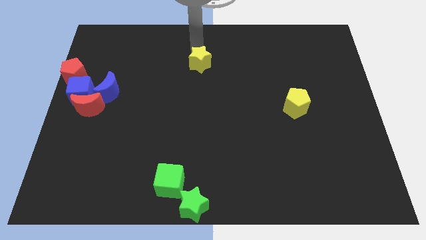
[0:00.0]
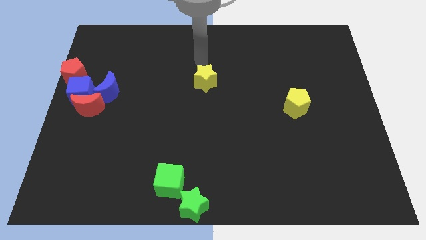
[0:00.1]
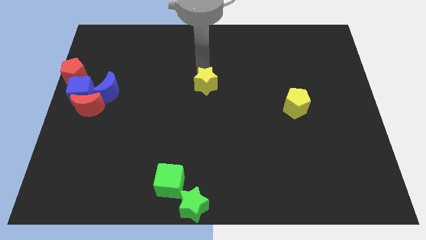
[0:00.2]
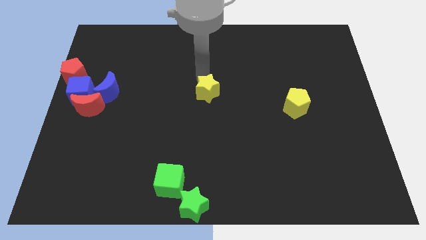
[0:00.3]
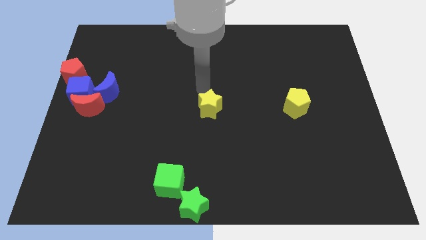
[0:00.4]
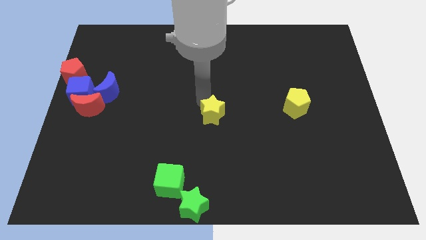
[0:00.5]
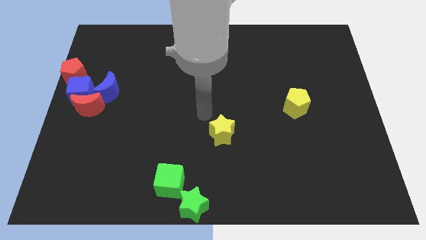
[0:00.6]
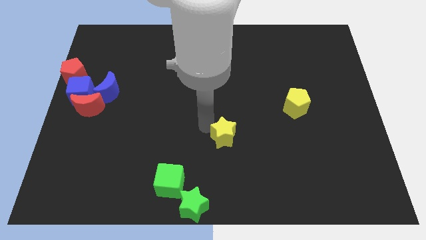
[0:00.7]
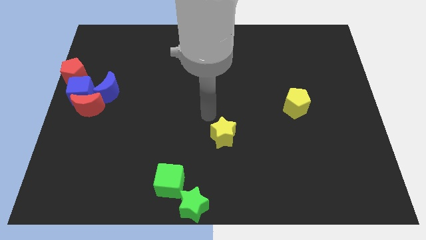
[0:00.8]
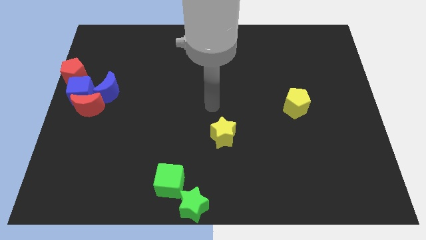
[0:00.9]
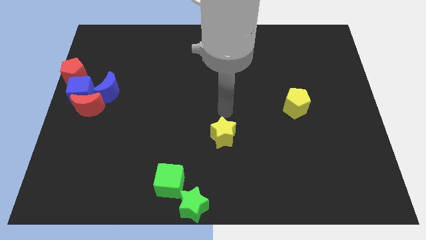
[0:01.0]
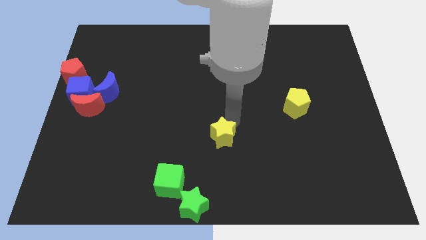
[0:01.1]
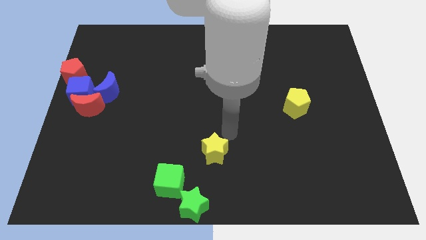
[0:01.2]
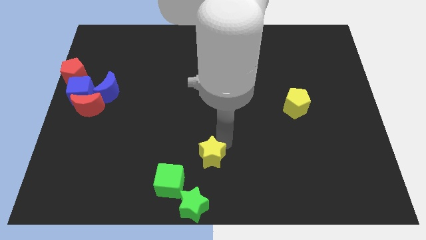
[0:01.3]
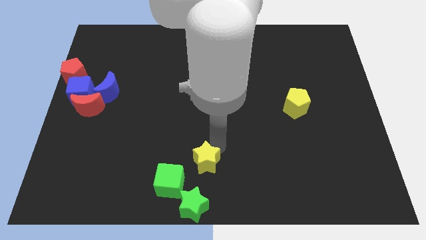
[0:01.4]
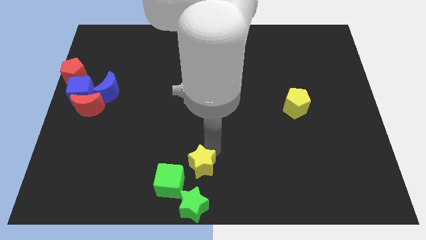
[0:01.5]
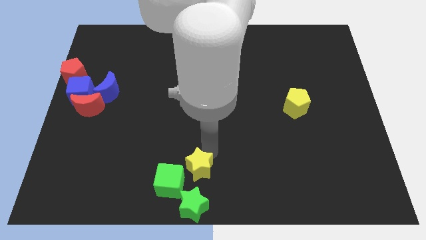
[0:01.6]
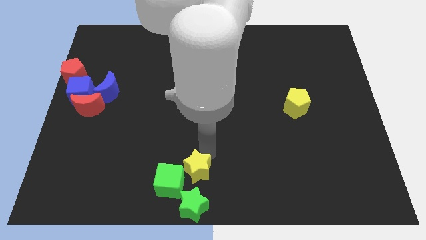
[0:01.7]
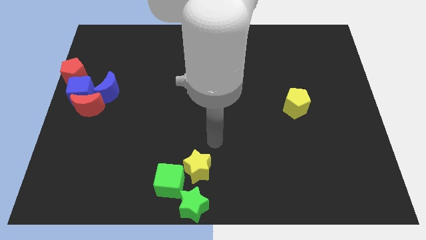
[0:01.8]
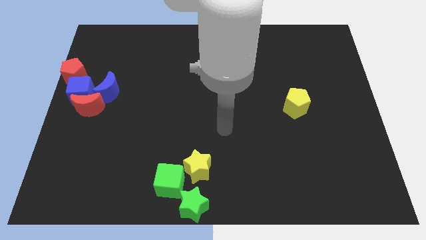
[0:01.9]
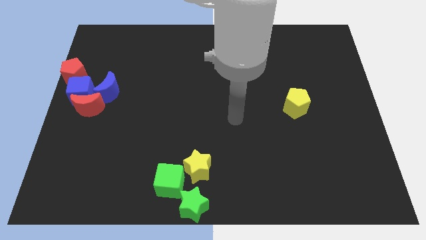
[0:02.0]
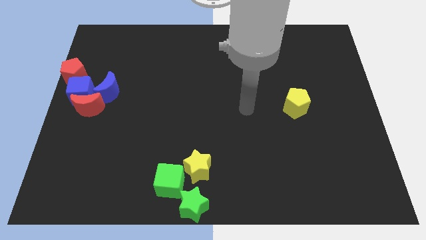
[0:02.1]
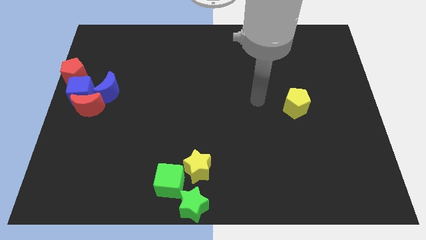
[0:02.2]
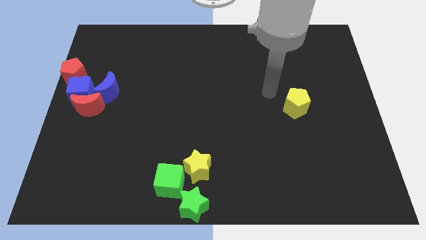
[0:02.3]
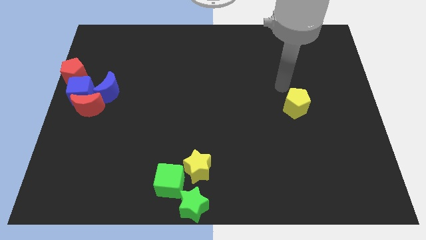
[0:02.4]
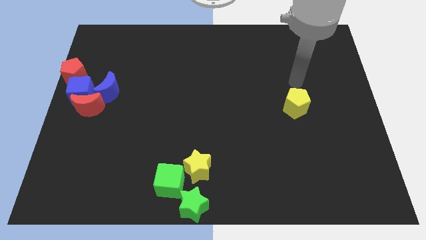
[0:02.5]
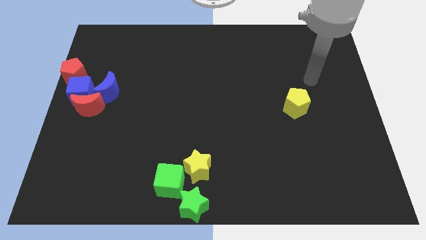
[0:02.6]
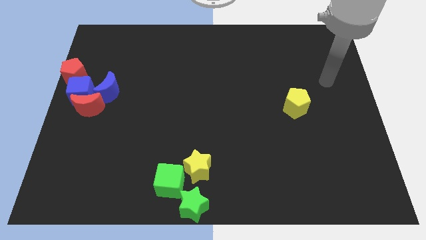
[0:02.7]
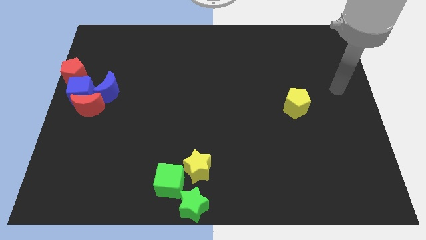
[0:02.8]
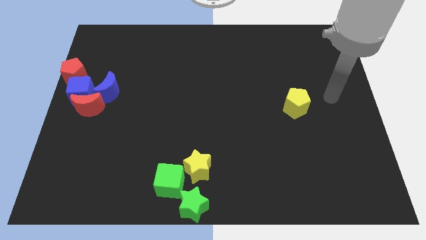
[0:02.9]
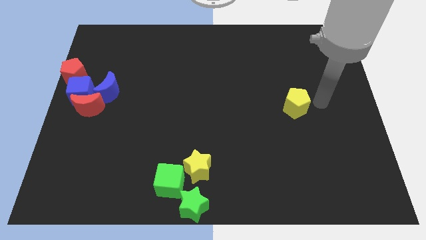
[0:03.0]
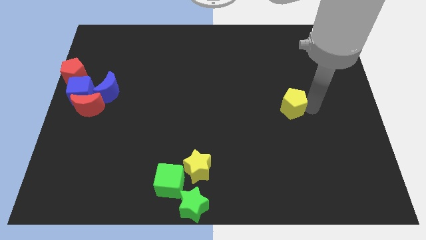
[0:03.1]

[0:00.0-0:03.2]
put the yellow star at the top of green star

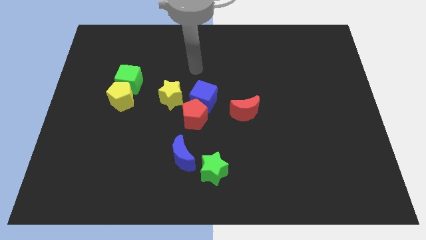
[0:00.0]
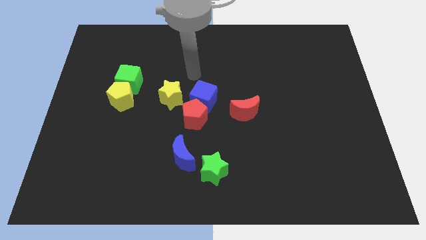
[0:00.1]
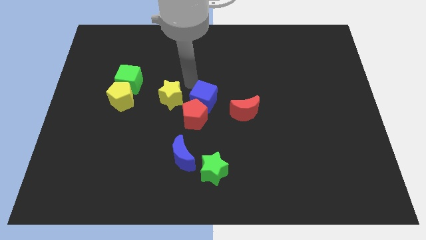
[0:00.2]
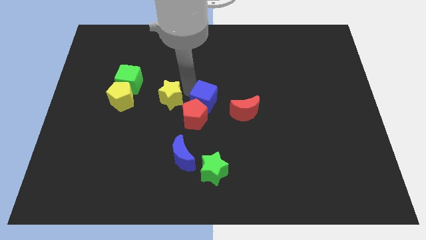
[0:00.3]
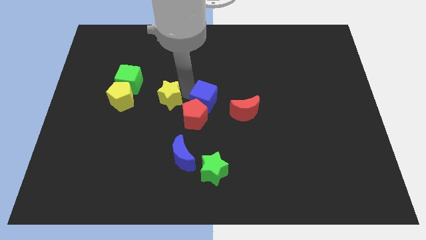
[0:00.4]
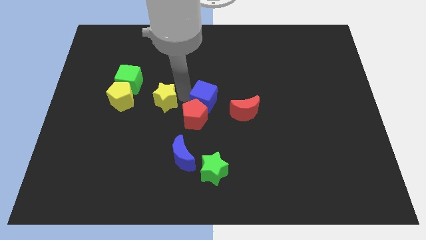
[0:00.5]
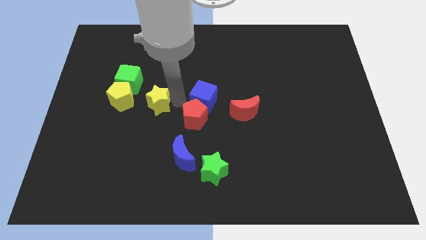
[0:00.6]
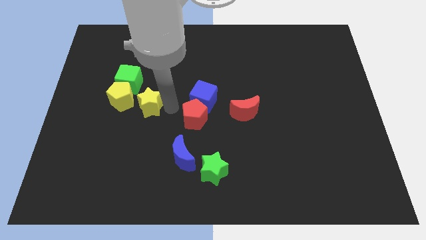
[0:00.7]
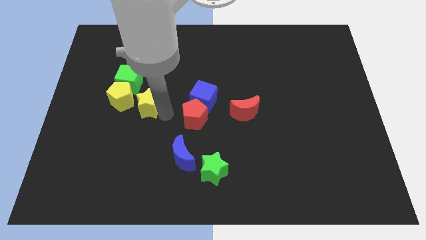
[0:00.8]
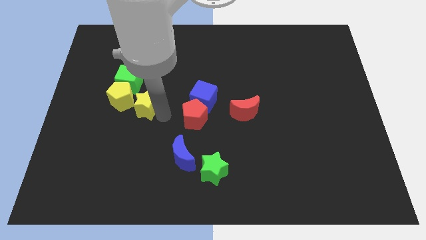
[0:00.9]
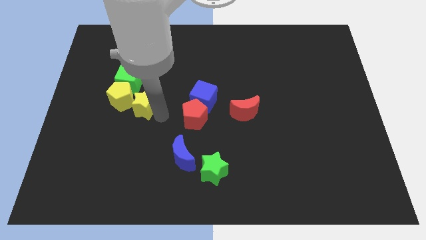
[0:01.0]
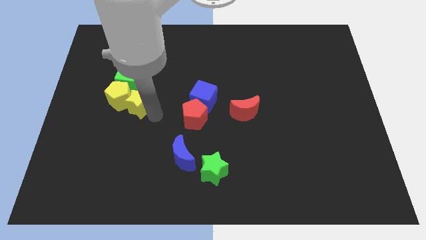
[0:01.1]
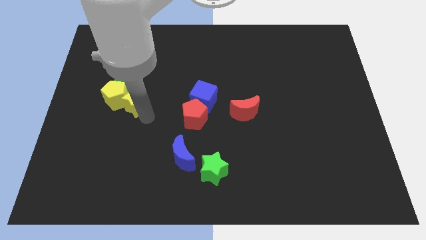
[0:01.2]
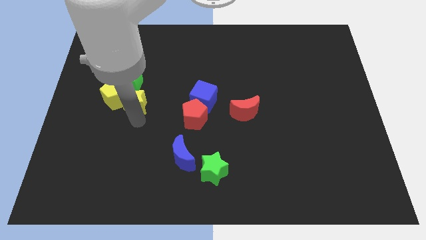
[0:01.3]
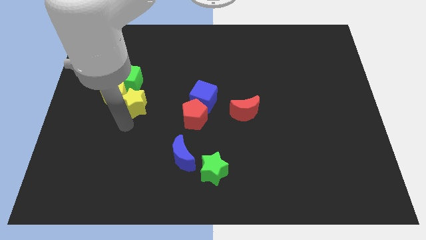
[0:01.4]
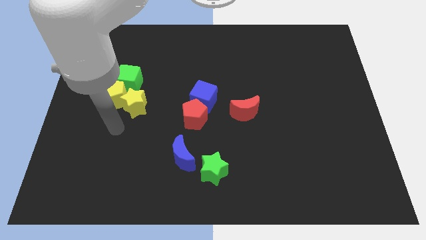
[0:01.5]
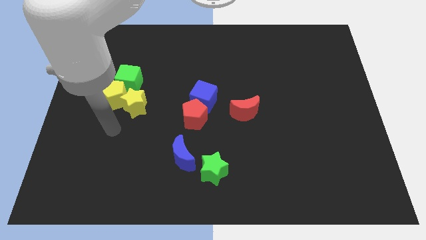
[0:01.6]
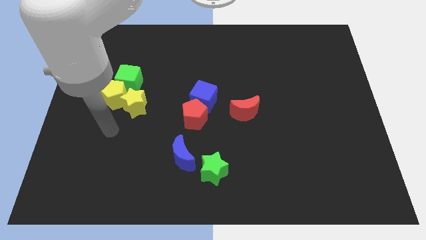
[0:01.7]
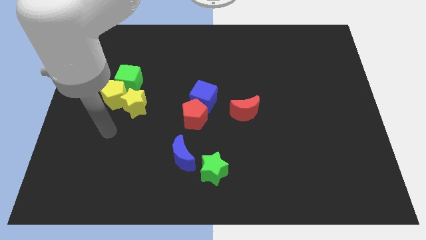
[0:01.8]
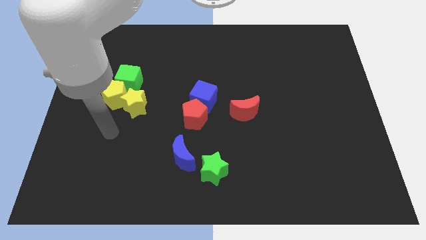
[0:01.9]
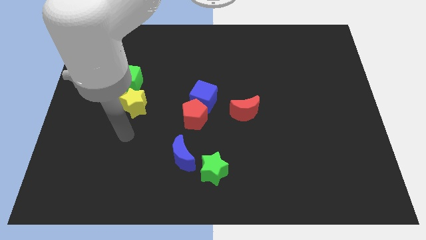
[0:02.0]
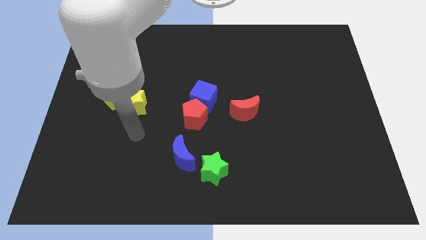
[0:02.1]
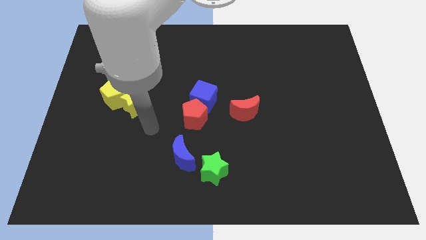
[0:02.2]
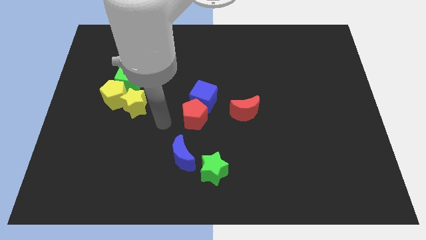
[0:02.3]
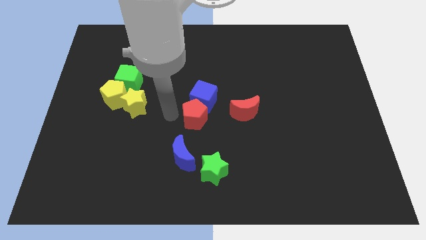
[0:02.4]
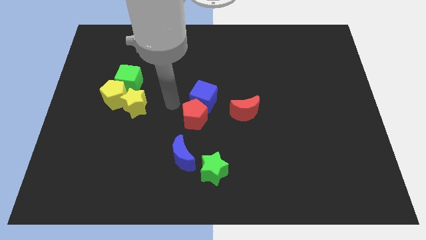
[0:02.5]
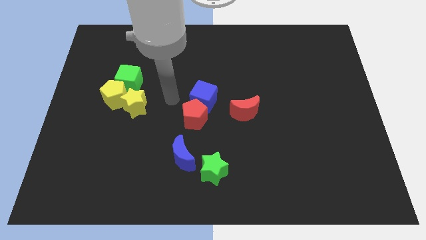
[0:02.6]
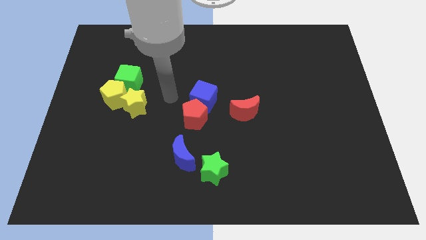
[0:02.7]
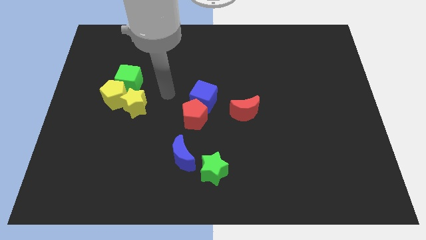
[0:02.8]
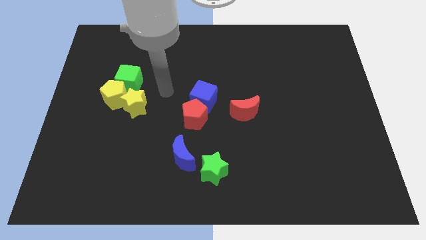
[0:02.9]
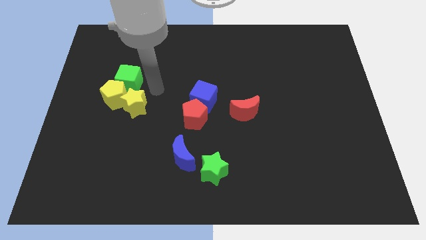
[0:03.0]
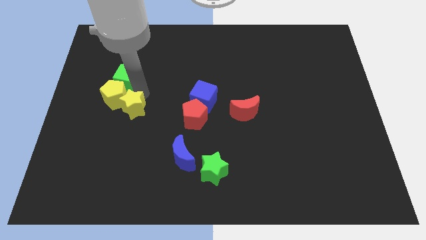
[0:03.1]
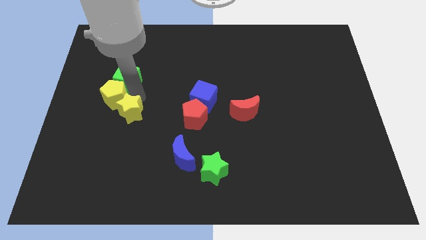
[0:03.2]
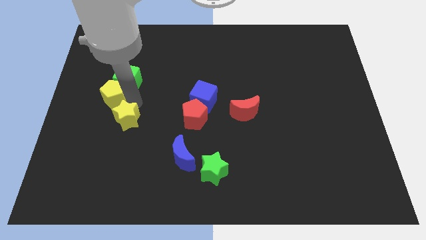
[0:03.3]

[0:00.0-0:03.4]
push the yellow star down slightly

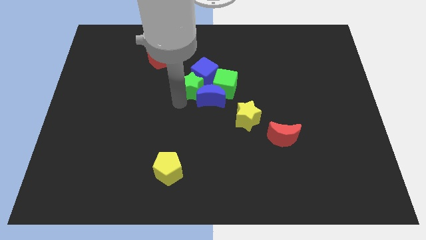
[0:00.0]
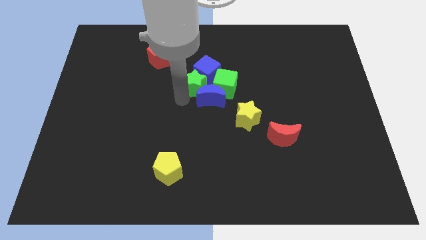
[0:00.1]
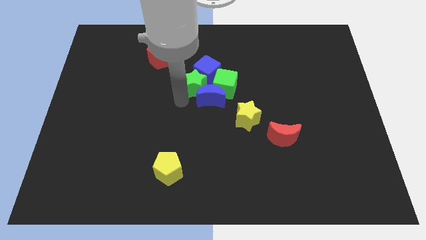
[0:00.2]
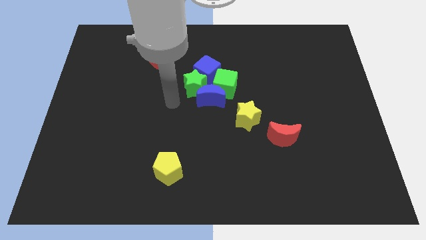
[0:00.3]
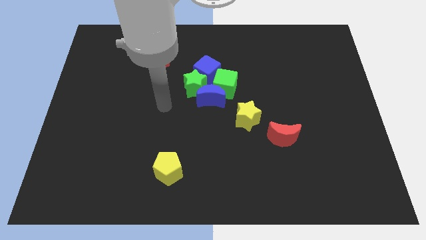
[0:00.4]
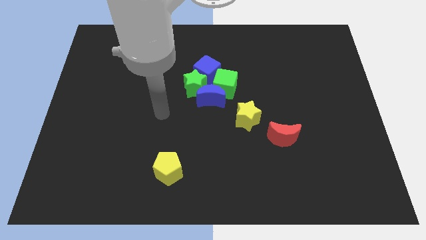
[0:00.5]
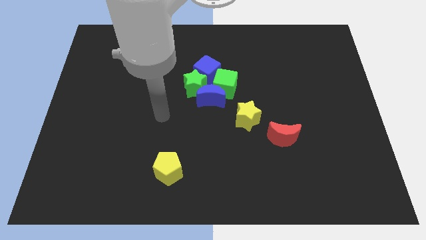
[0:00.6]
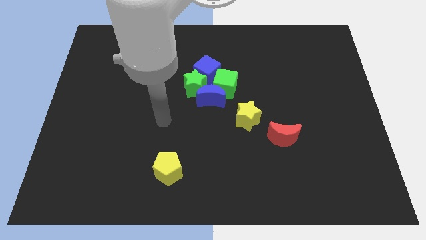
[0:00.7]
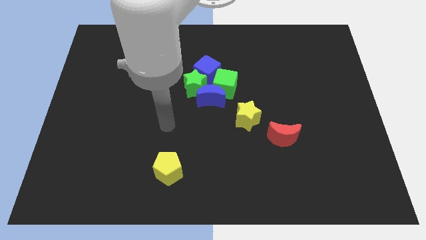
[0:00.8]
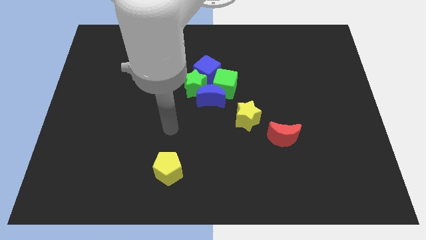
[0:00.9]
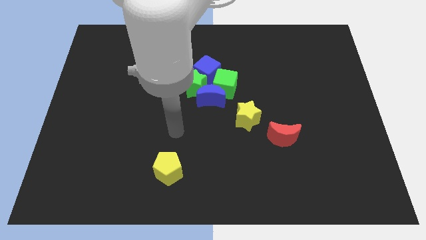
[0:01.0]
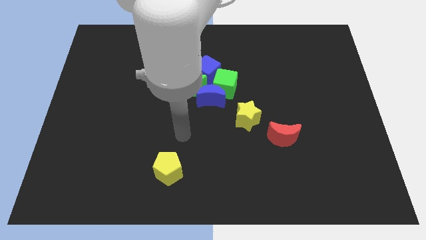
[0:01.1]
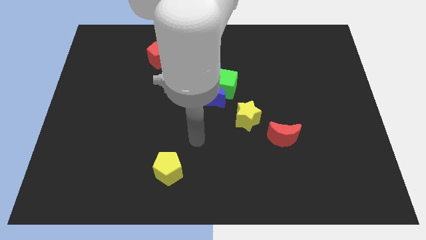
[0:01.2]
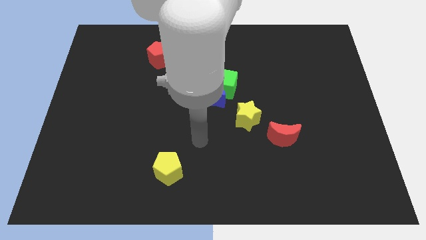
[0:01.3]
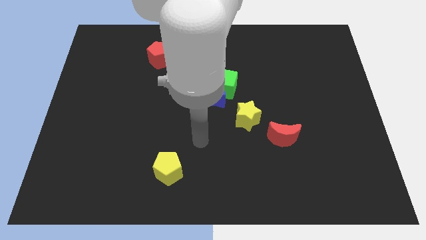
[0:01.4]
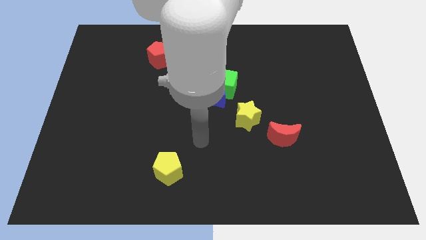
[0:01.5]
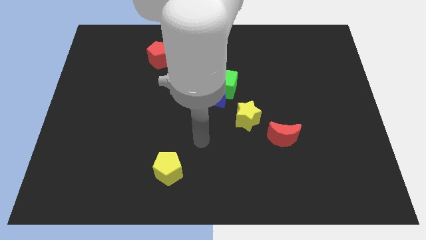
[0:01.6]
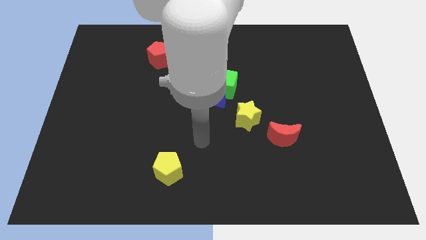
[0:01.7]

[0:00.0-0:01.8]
place the arm diagonally to the yellow pentagon

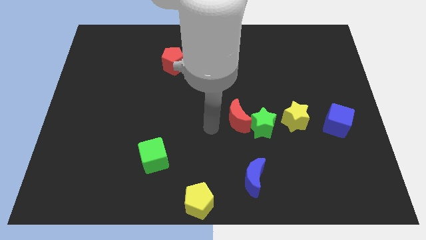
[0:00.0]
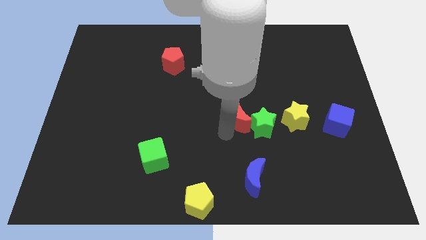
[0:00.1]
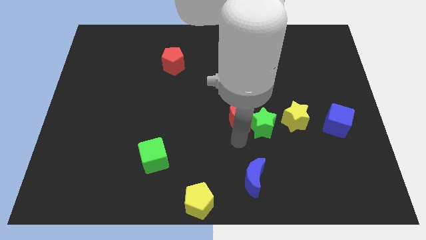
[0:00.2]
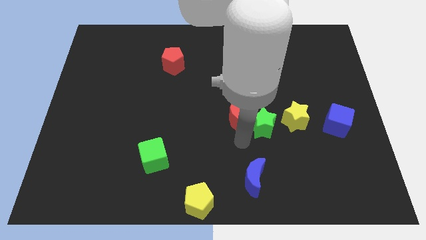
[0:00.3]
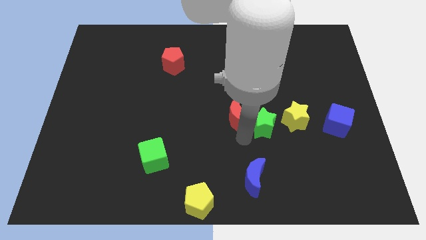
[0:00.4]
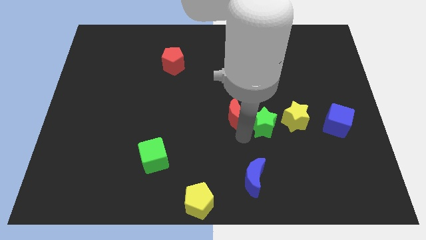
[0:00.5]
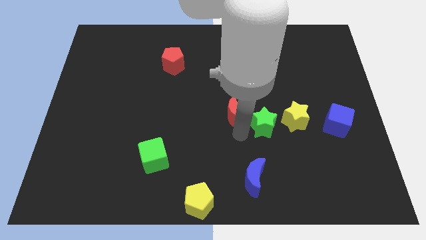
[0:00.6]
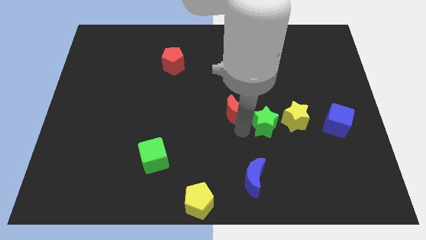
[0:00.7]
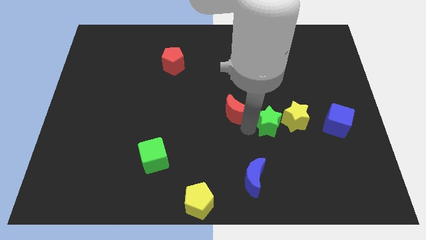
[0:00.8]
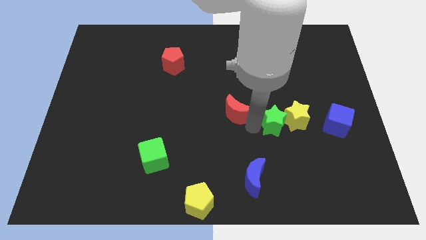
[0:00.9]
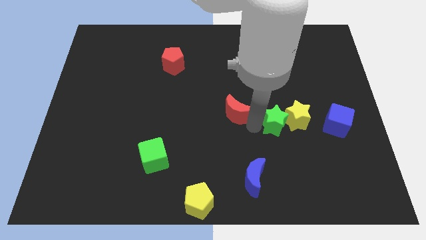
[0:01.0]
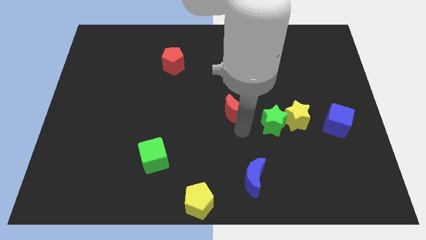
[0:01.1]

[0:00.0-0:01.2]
push the green star into the yellow star
